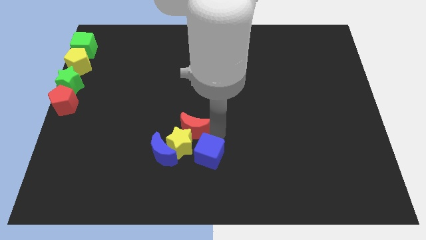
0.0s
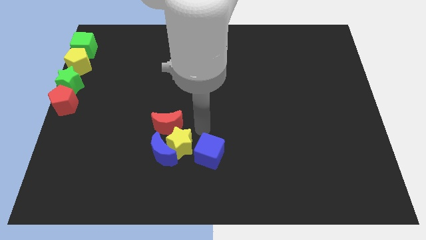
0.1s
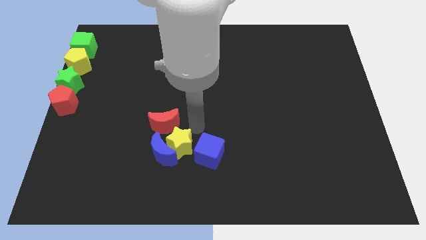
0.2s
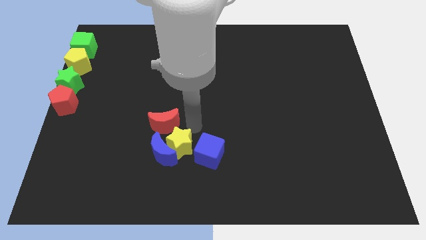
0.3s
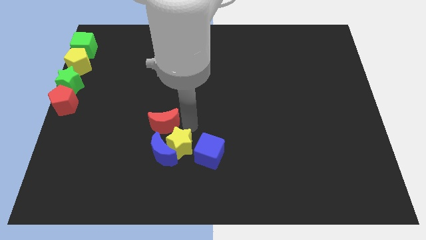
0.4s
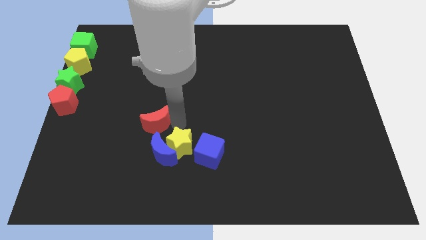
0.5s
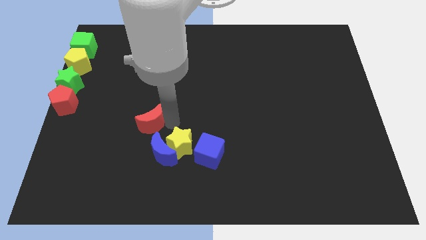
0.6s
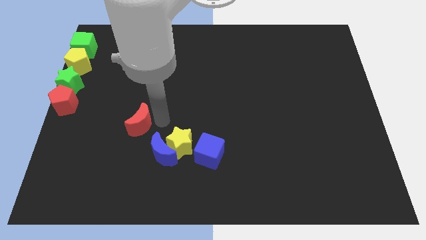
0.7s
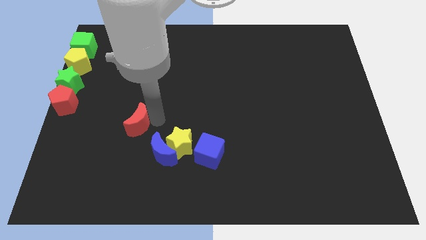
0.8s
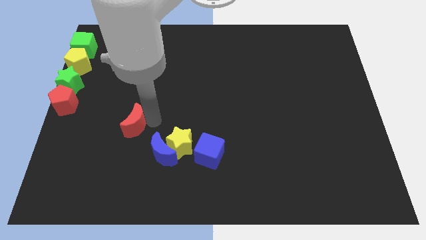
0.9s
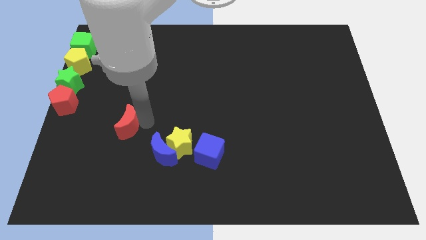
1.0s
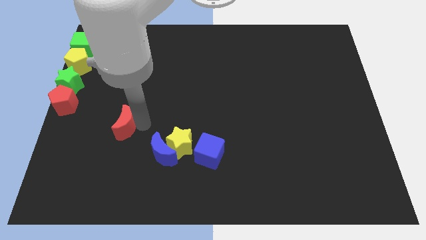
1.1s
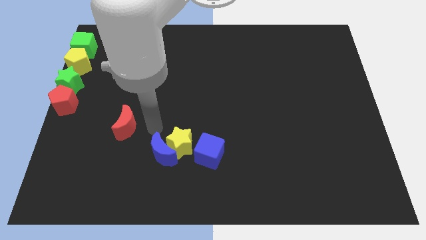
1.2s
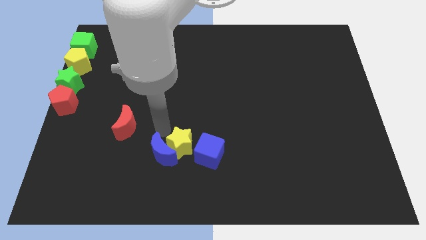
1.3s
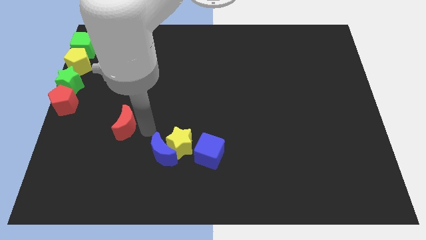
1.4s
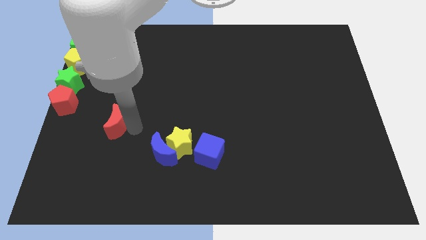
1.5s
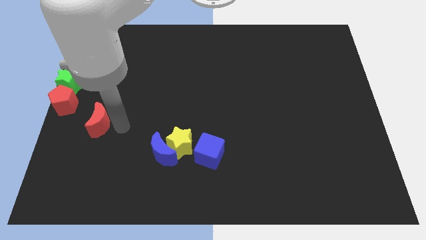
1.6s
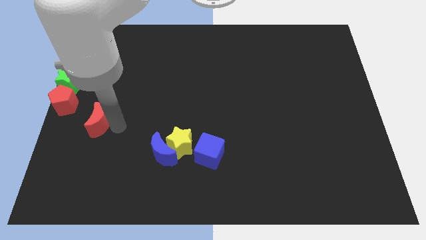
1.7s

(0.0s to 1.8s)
push the red crescent away from the blue cube

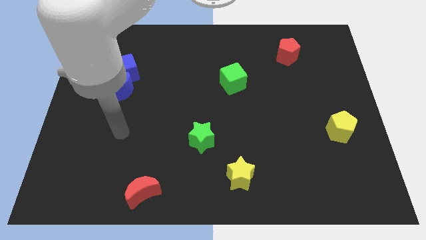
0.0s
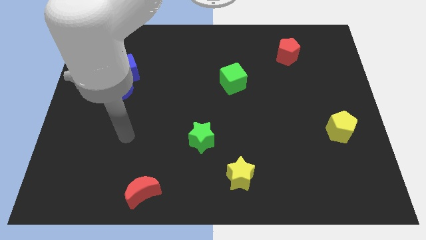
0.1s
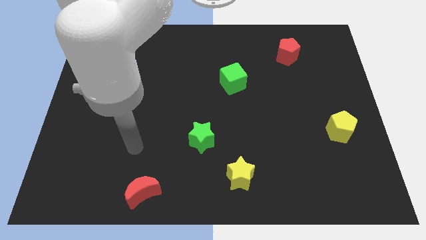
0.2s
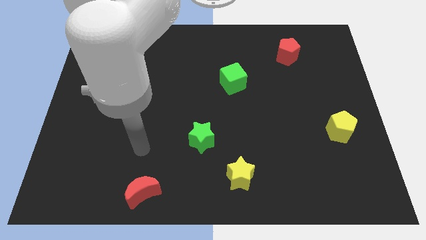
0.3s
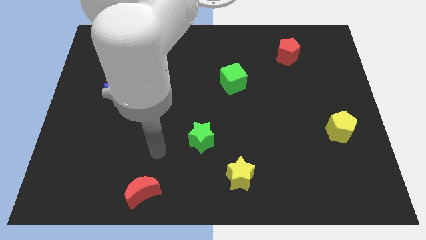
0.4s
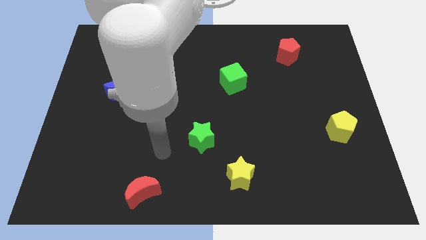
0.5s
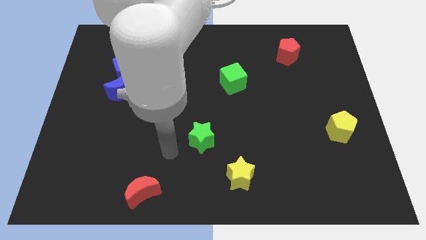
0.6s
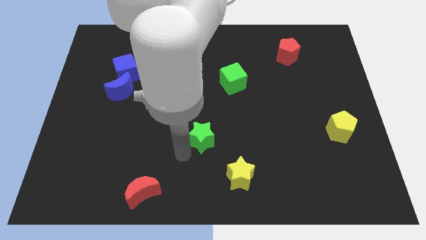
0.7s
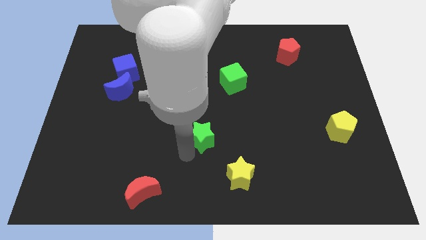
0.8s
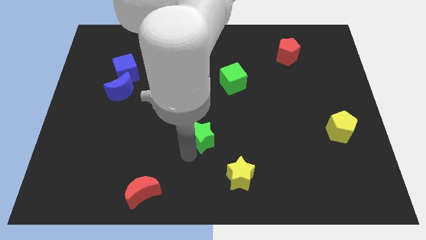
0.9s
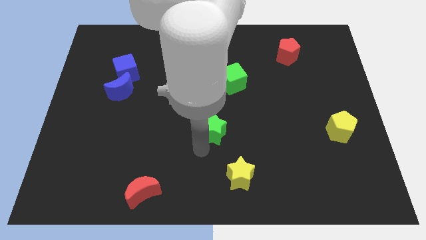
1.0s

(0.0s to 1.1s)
slide the green star towards the center

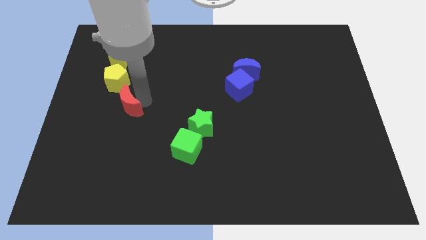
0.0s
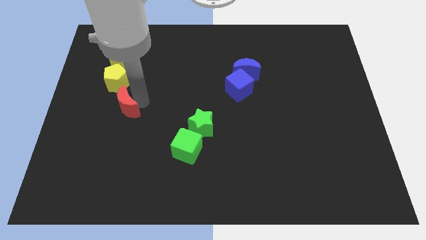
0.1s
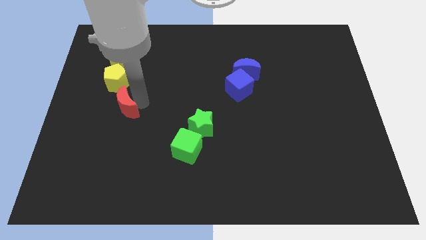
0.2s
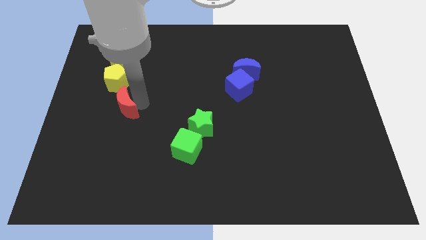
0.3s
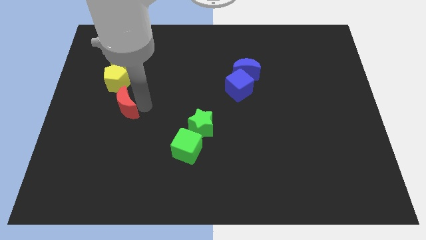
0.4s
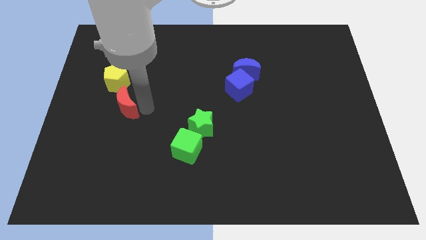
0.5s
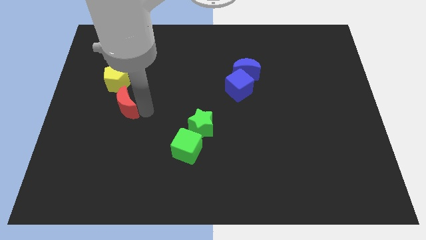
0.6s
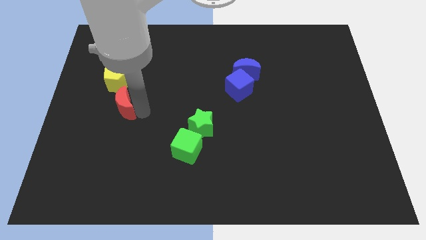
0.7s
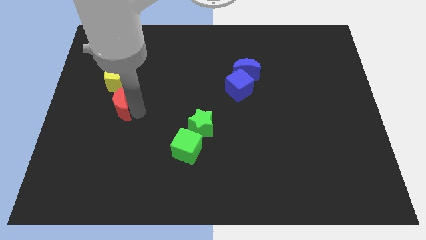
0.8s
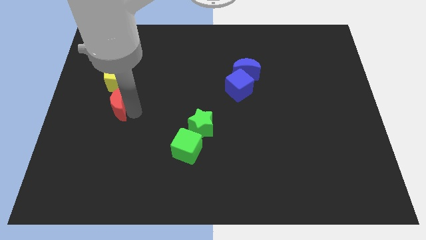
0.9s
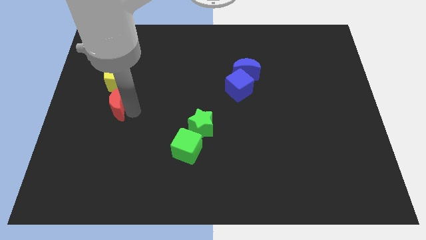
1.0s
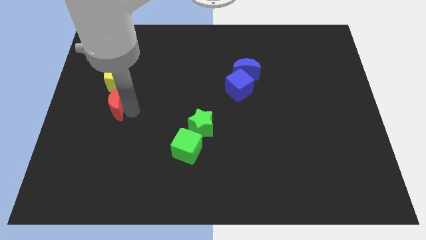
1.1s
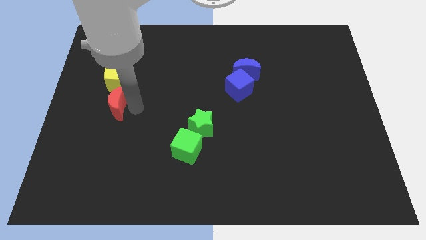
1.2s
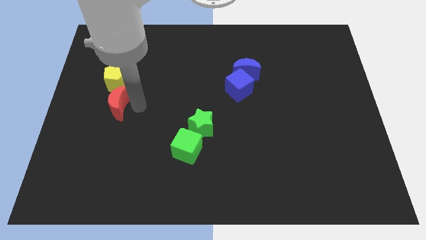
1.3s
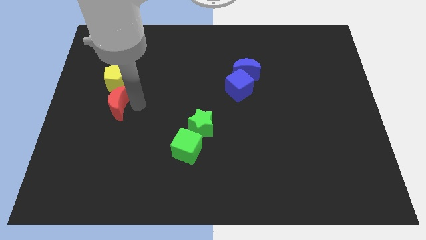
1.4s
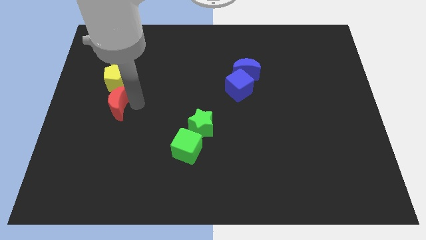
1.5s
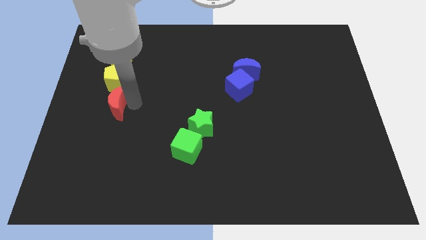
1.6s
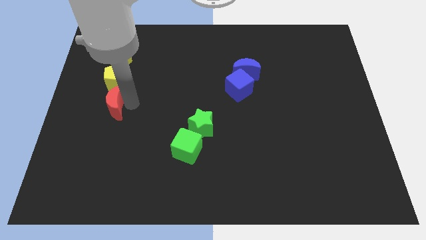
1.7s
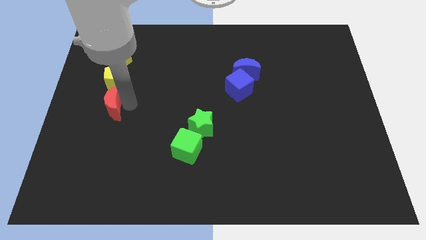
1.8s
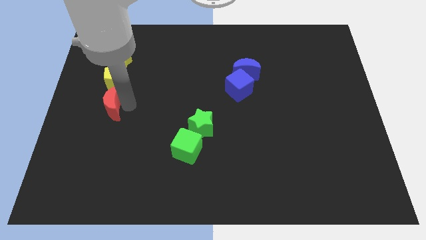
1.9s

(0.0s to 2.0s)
move the red crescent below the yellow pentagon

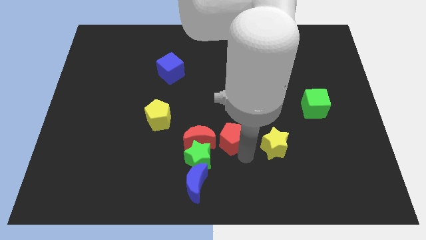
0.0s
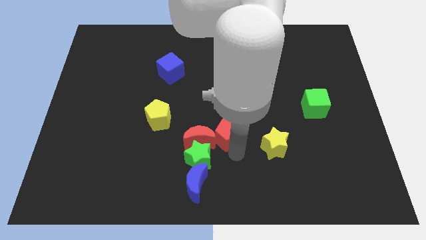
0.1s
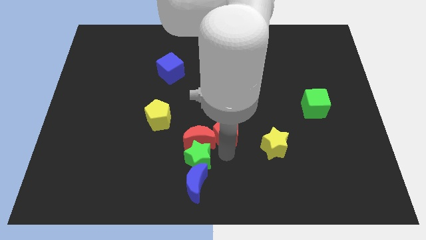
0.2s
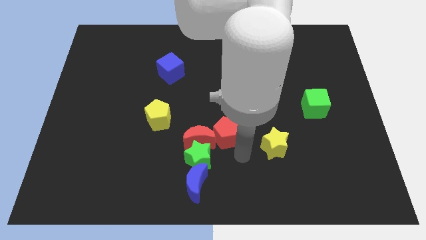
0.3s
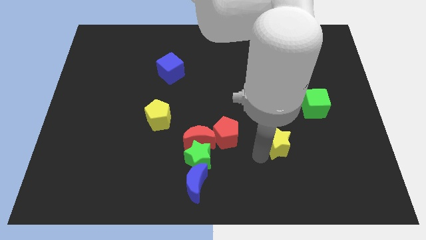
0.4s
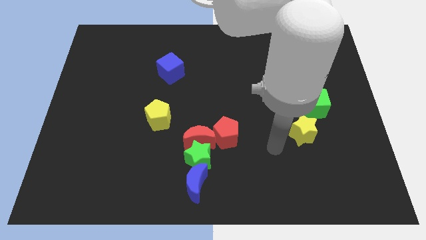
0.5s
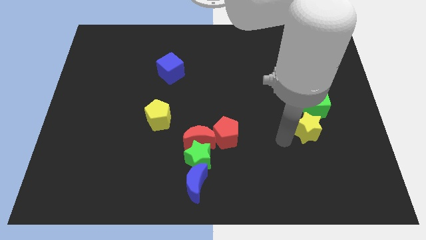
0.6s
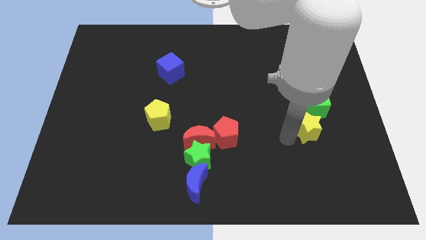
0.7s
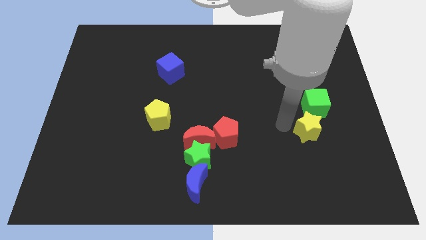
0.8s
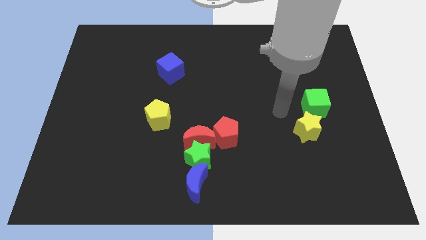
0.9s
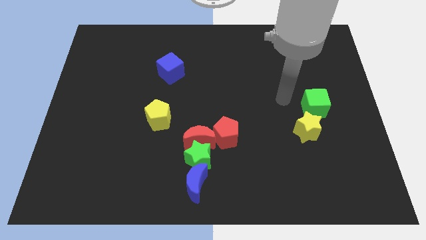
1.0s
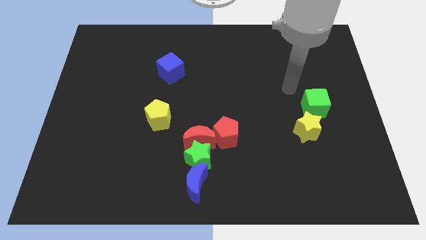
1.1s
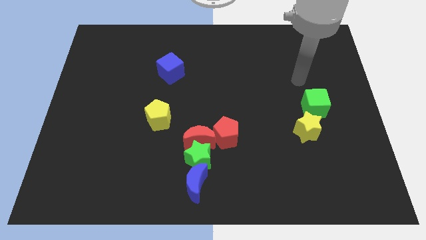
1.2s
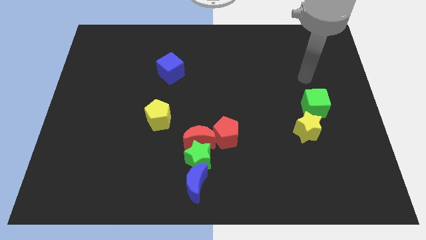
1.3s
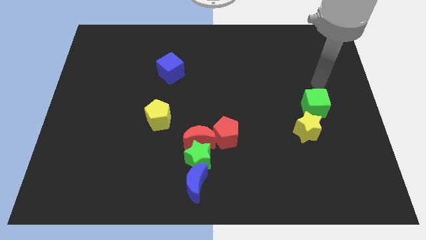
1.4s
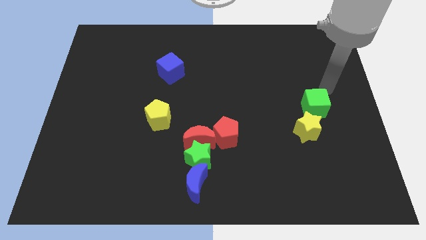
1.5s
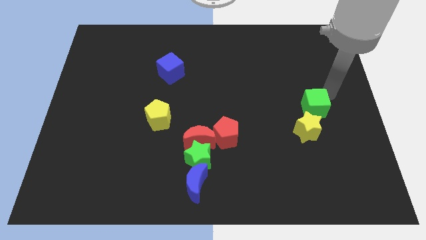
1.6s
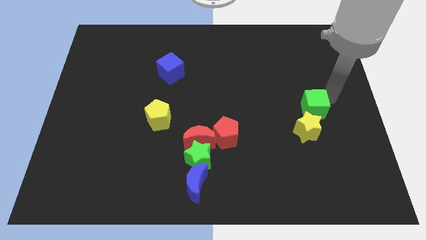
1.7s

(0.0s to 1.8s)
push the yellow star close to the green cube

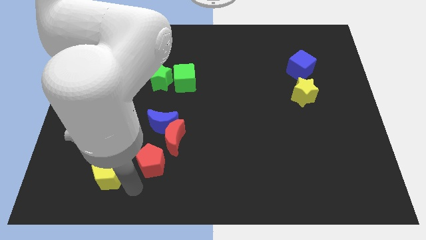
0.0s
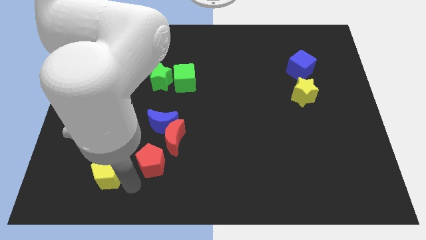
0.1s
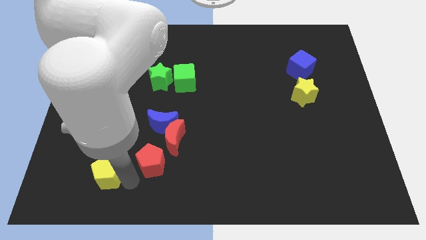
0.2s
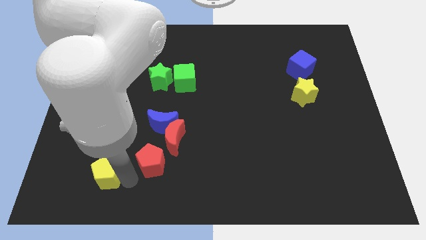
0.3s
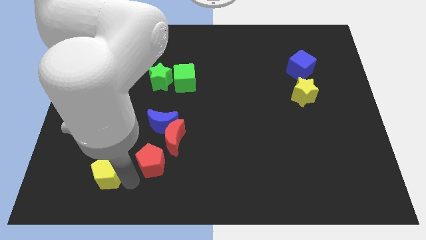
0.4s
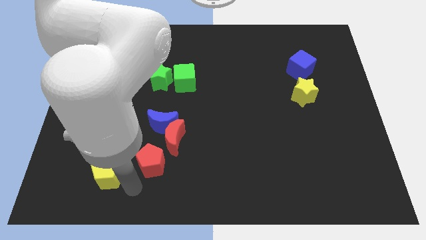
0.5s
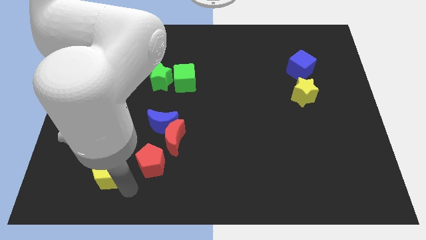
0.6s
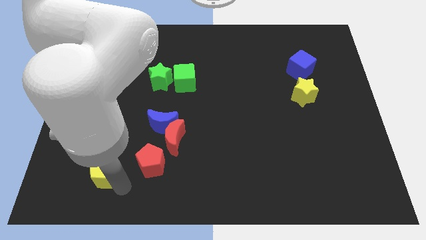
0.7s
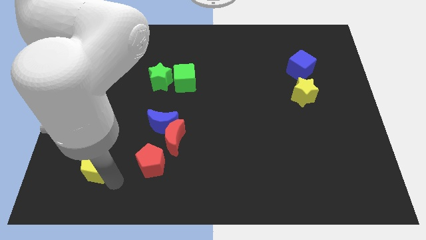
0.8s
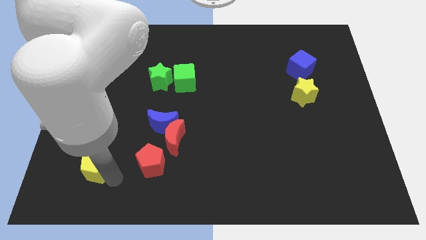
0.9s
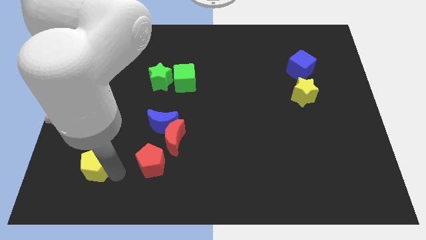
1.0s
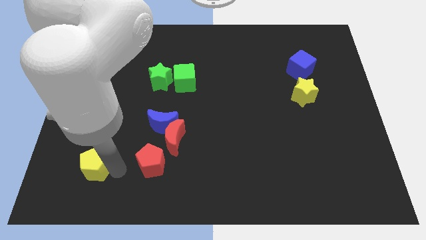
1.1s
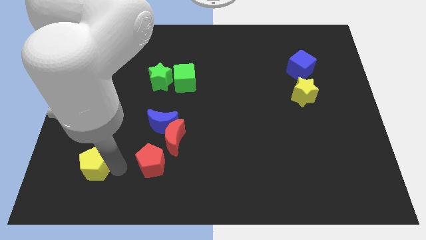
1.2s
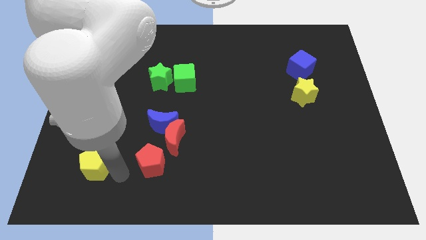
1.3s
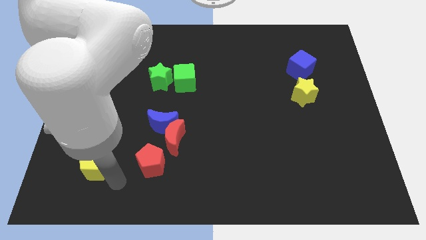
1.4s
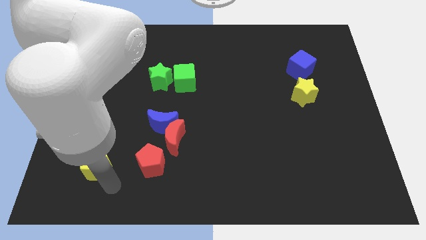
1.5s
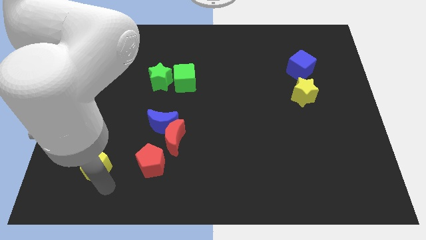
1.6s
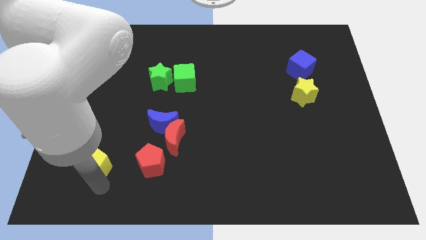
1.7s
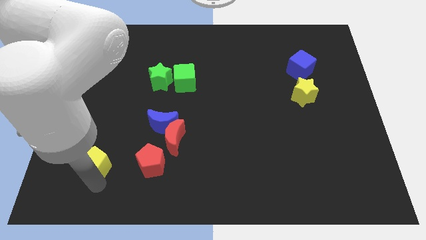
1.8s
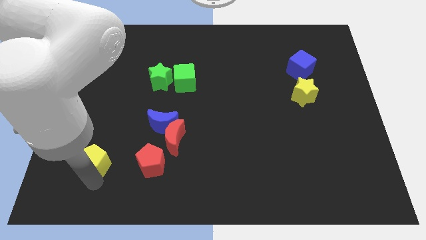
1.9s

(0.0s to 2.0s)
move the yellow pentagon horizontally left to the red pentagon
